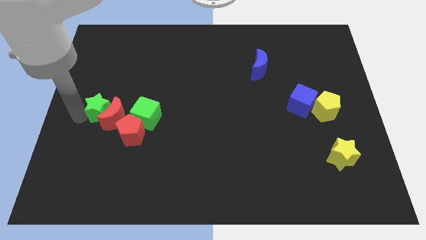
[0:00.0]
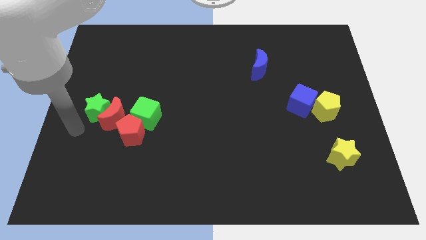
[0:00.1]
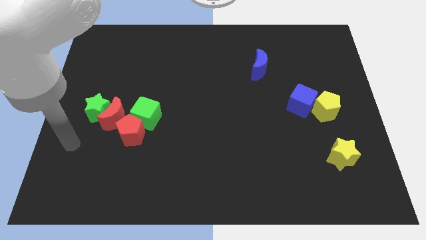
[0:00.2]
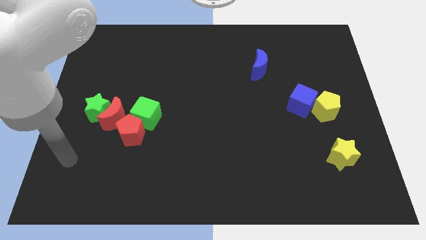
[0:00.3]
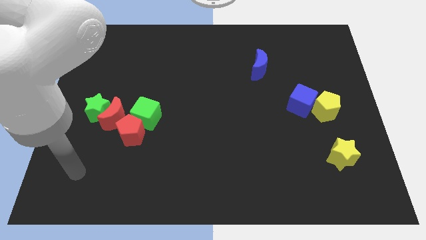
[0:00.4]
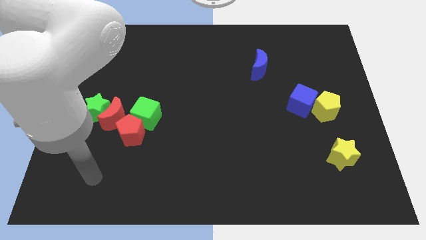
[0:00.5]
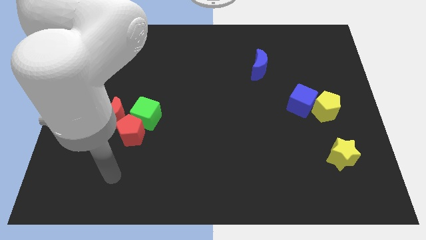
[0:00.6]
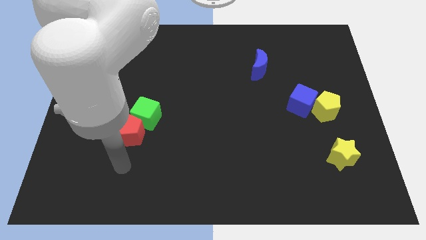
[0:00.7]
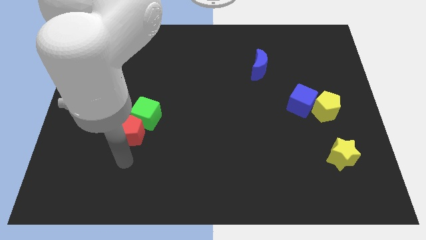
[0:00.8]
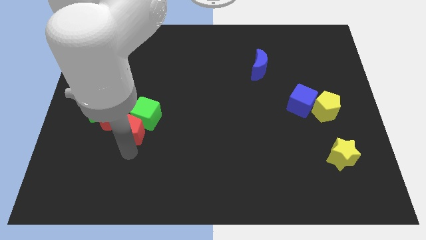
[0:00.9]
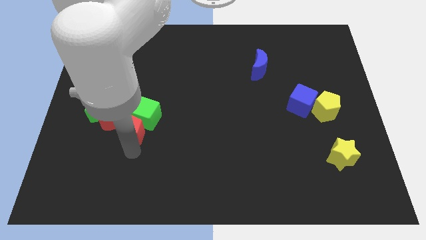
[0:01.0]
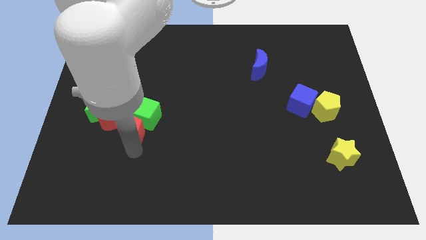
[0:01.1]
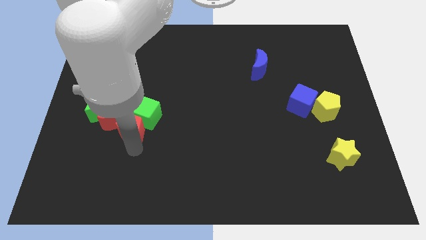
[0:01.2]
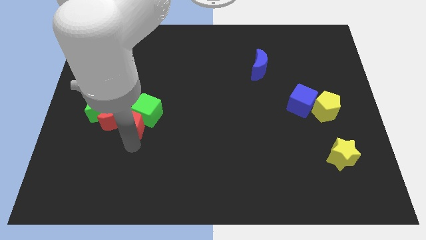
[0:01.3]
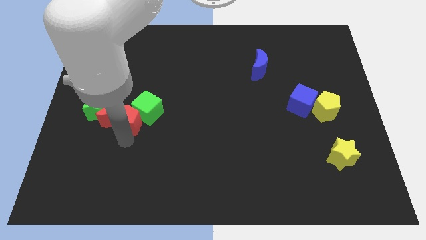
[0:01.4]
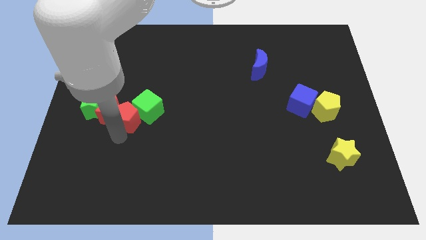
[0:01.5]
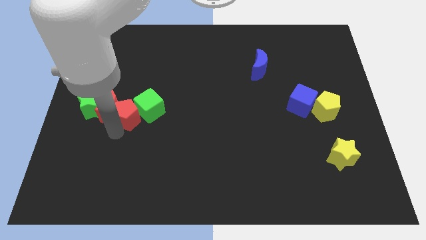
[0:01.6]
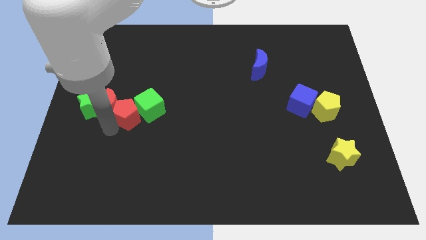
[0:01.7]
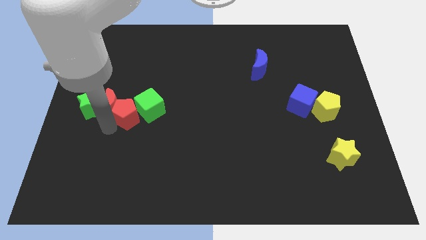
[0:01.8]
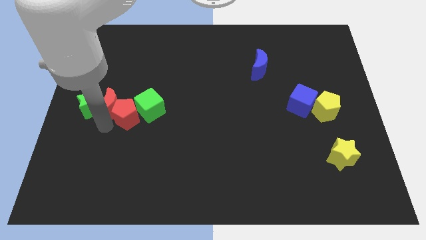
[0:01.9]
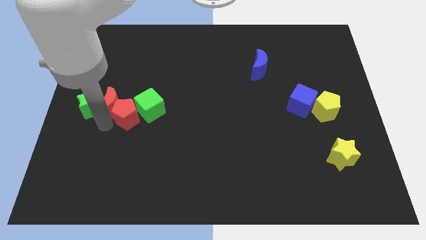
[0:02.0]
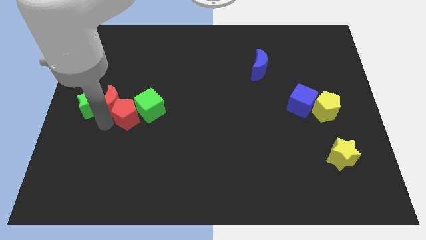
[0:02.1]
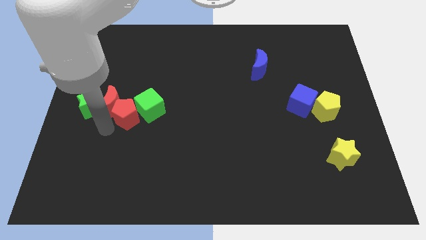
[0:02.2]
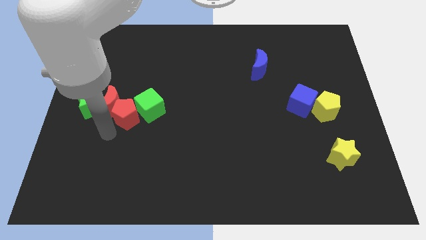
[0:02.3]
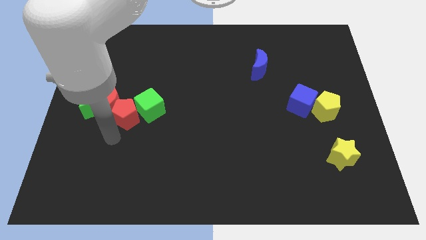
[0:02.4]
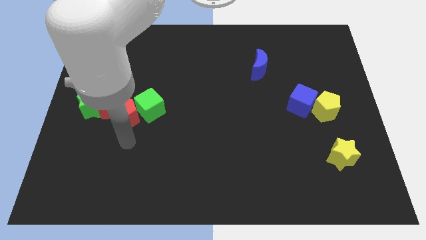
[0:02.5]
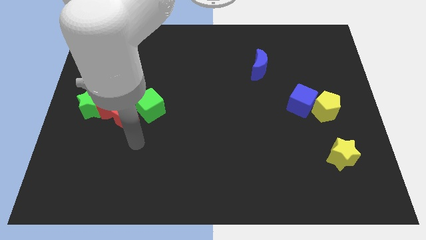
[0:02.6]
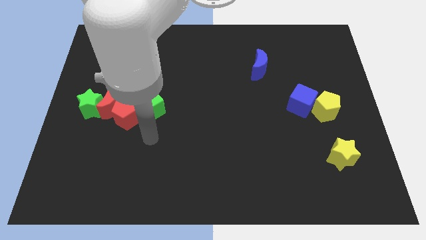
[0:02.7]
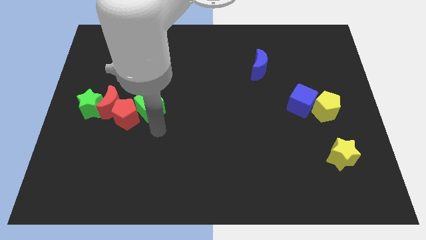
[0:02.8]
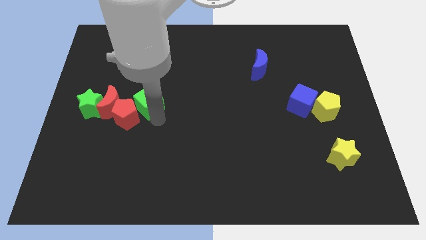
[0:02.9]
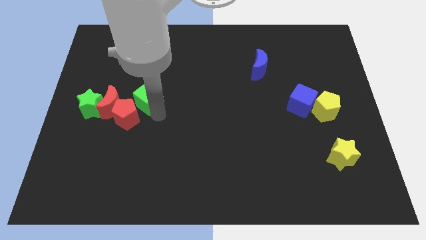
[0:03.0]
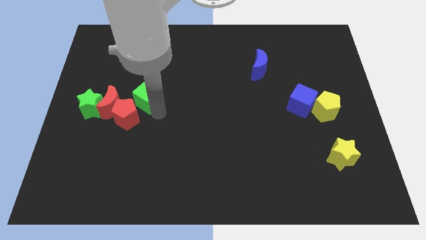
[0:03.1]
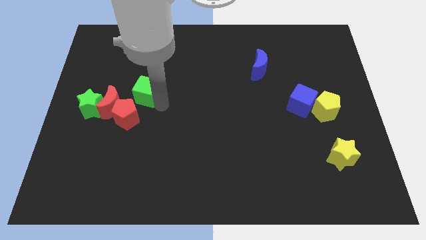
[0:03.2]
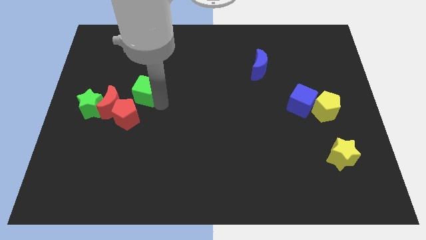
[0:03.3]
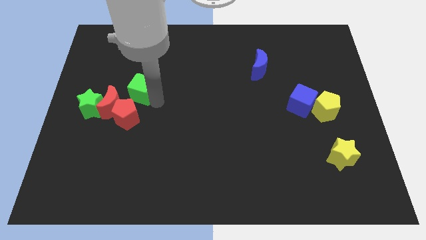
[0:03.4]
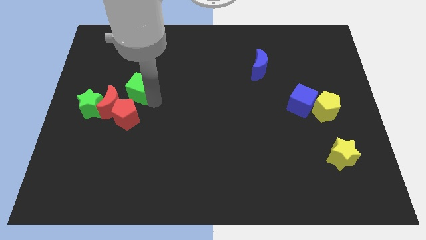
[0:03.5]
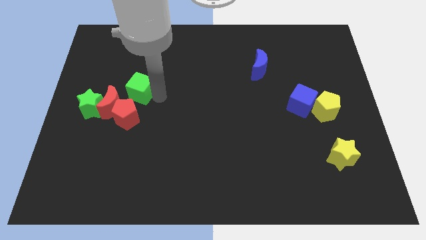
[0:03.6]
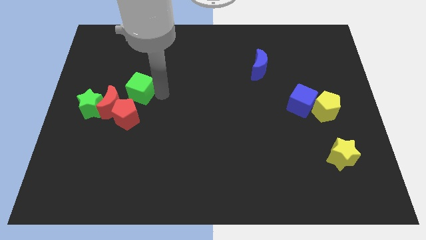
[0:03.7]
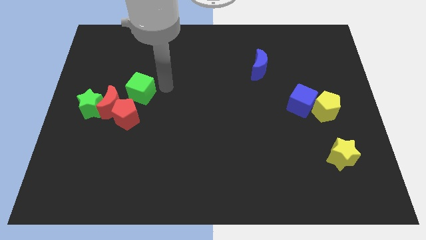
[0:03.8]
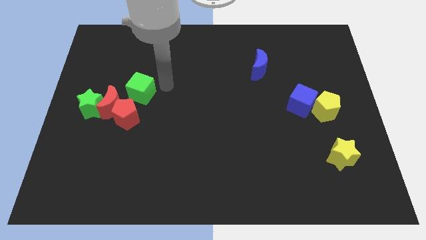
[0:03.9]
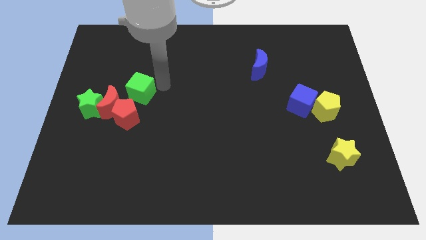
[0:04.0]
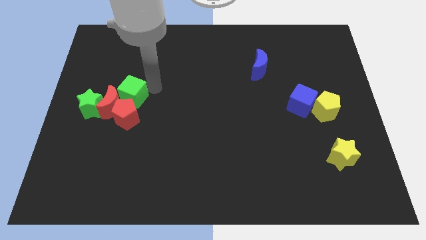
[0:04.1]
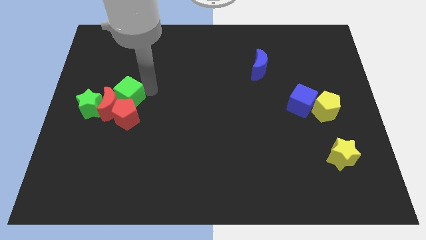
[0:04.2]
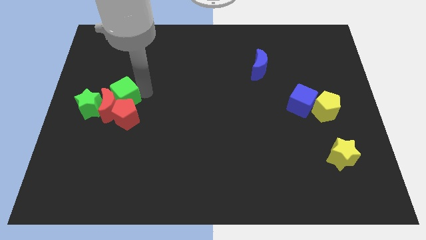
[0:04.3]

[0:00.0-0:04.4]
push the red and green blocks together at the center left of the board

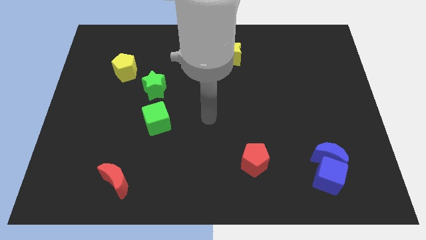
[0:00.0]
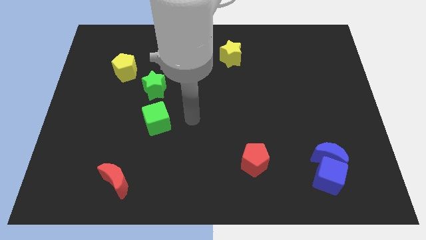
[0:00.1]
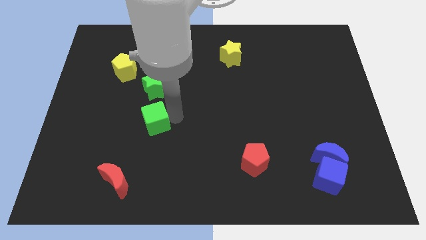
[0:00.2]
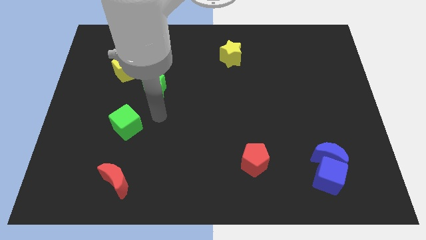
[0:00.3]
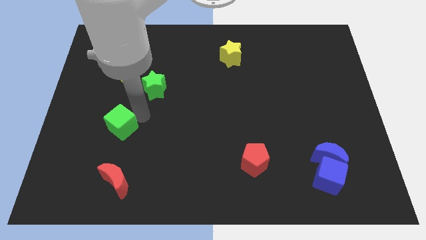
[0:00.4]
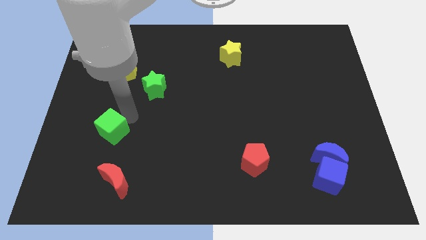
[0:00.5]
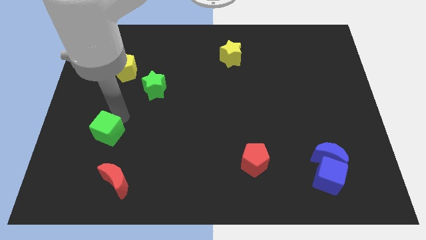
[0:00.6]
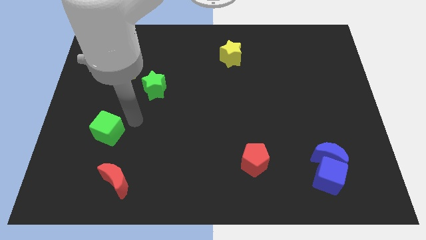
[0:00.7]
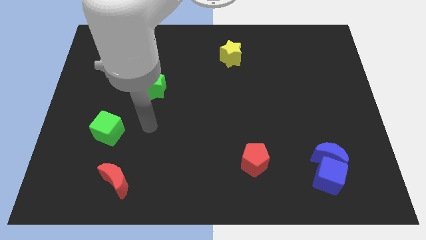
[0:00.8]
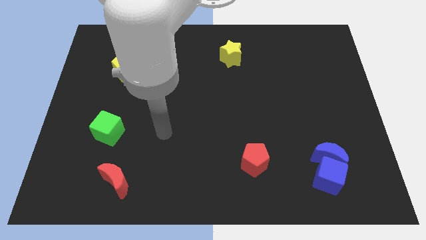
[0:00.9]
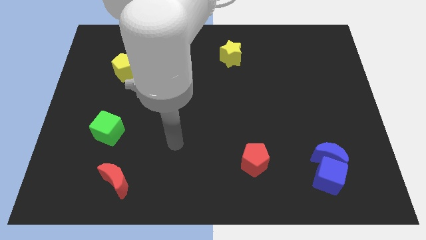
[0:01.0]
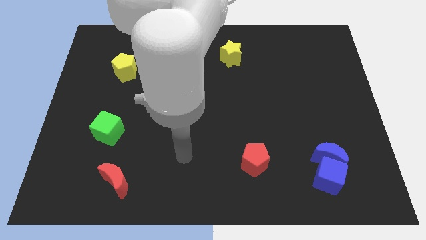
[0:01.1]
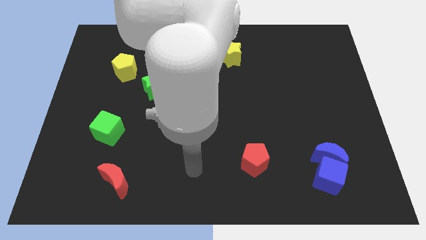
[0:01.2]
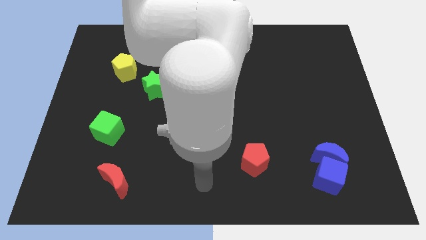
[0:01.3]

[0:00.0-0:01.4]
push the green cube vertically above the red moon

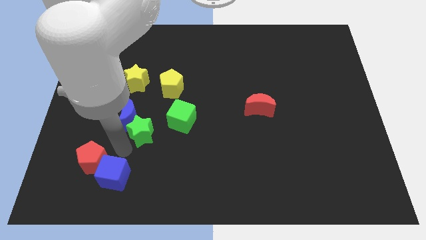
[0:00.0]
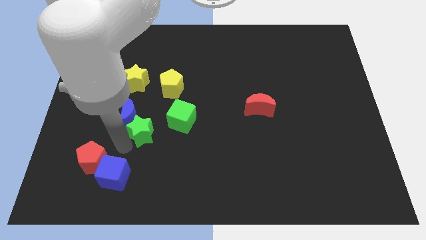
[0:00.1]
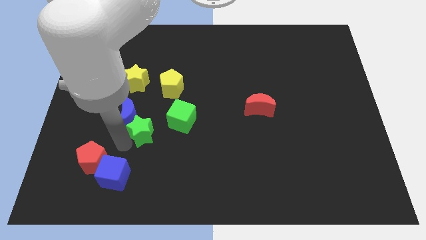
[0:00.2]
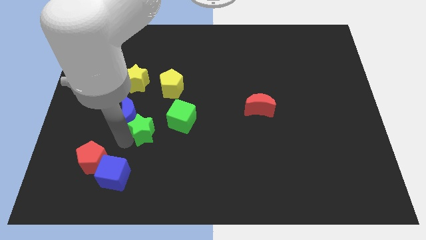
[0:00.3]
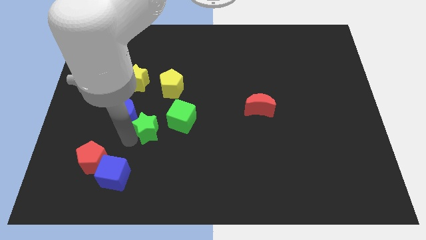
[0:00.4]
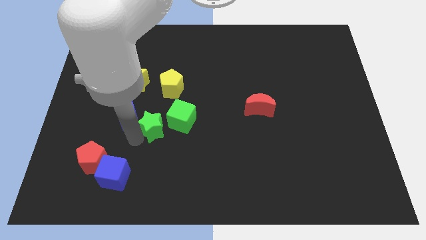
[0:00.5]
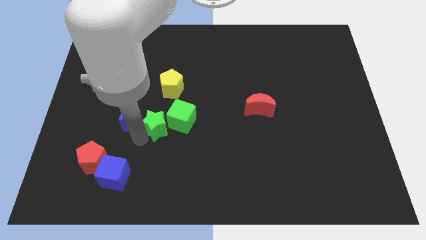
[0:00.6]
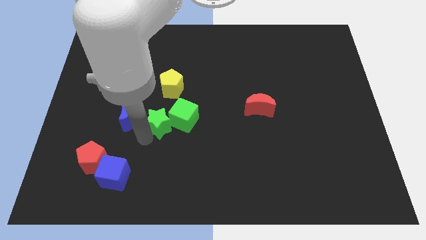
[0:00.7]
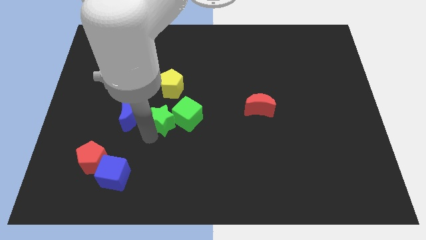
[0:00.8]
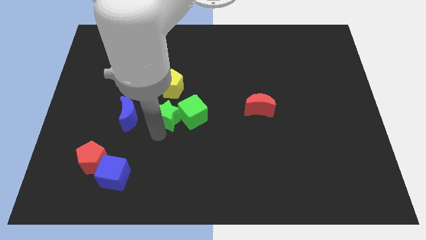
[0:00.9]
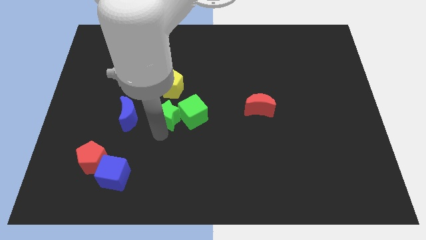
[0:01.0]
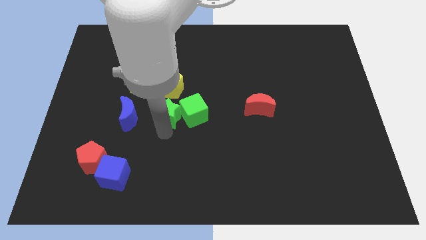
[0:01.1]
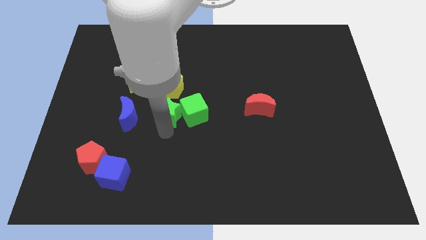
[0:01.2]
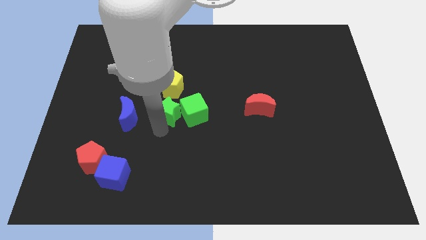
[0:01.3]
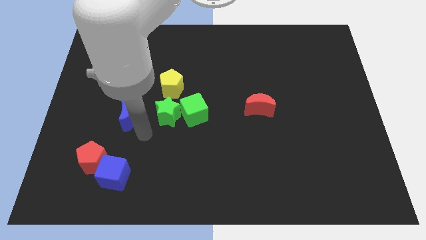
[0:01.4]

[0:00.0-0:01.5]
push the green star into the green cube

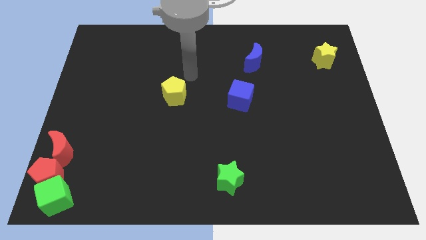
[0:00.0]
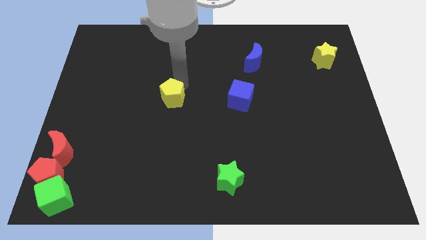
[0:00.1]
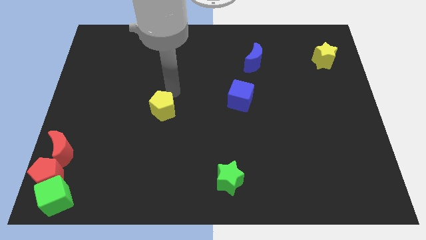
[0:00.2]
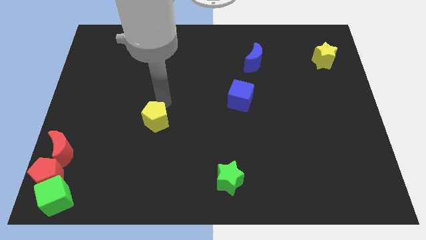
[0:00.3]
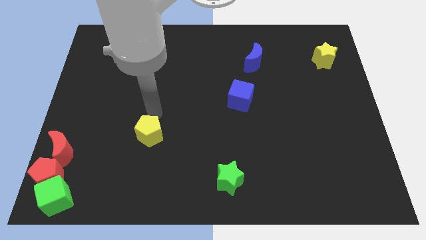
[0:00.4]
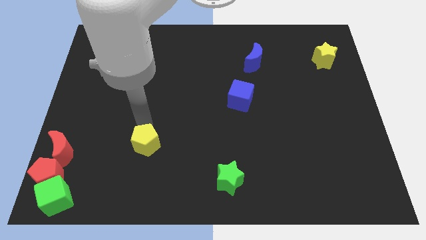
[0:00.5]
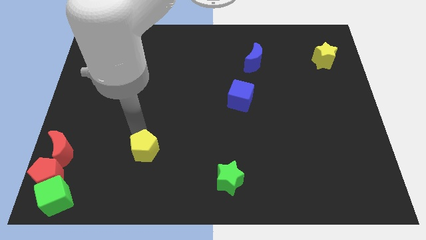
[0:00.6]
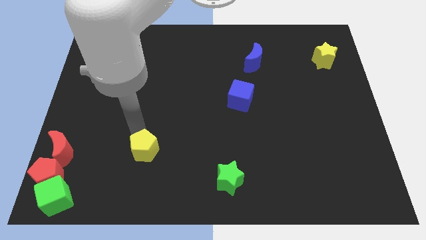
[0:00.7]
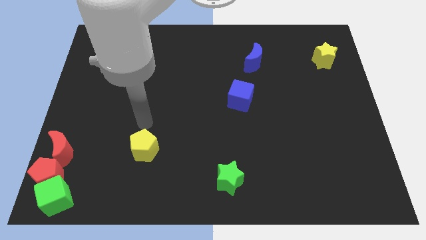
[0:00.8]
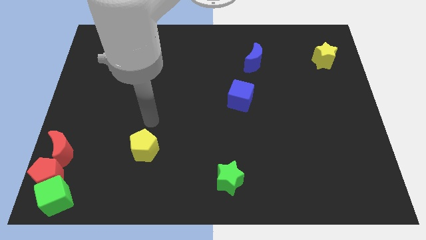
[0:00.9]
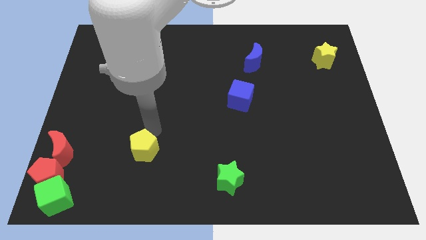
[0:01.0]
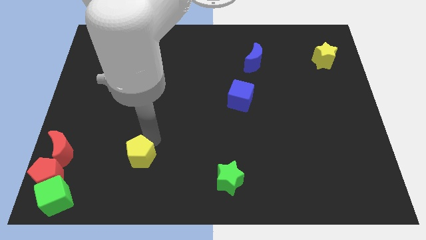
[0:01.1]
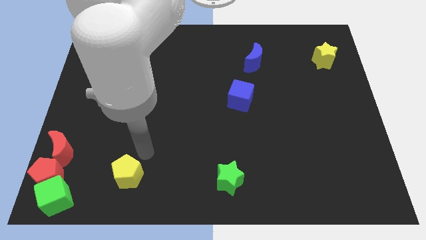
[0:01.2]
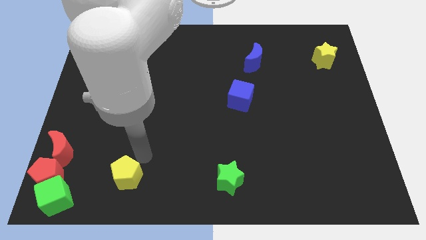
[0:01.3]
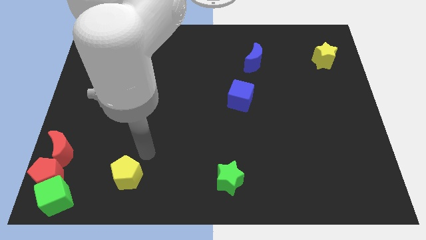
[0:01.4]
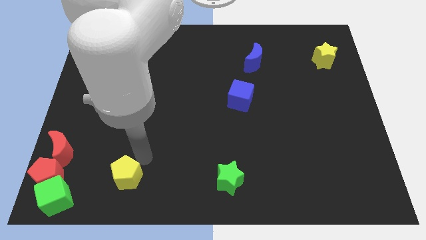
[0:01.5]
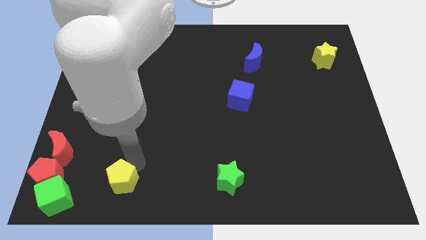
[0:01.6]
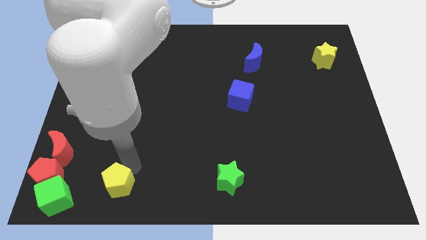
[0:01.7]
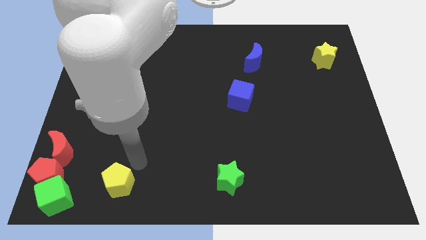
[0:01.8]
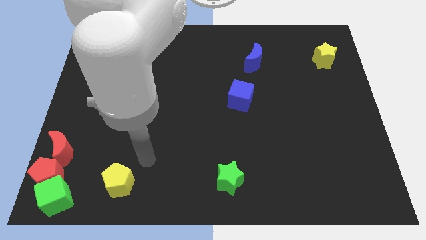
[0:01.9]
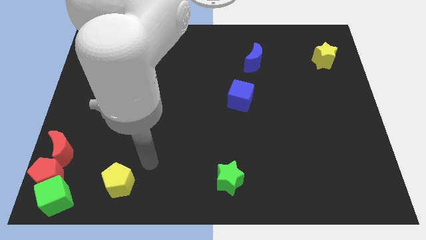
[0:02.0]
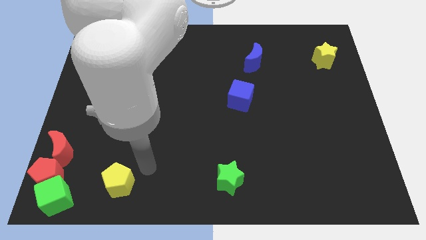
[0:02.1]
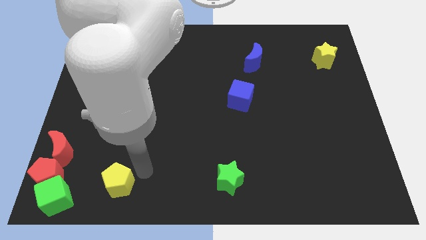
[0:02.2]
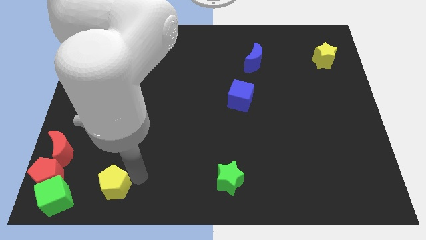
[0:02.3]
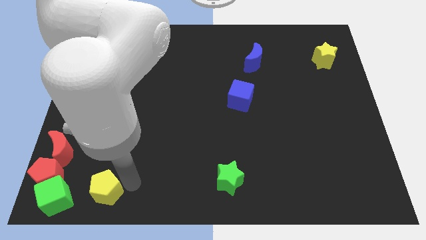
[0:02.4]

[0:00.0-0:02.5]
push the yellow pentagon towards the left bottom end
